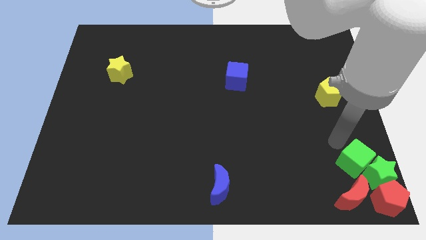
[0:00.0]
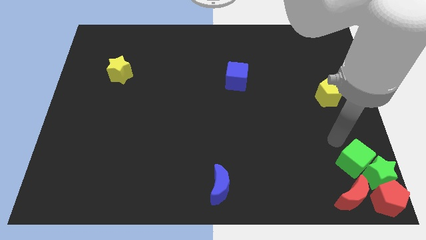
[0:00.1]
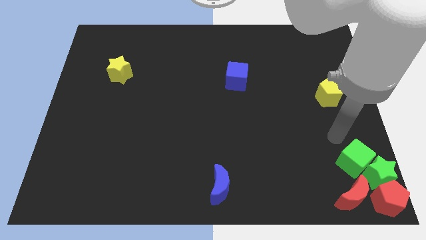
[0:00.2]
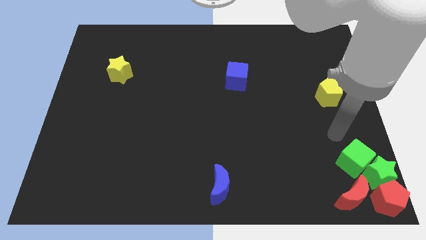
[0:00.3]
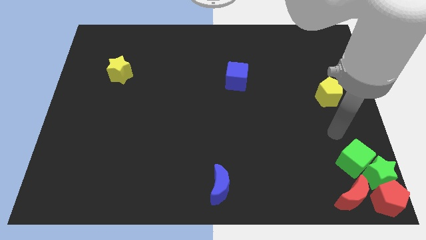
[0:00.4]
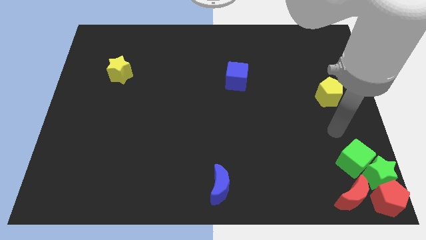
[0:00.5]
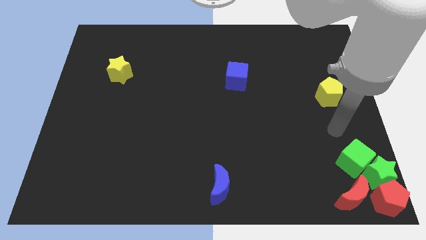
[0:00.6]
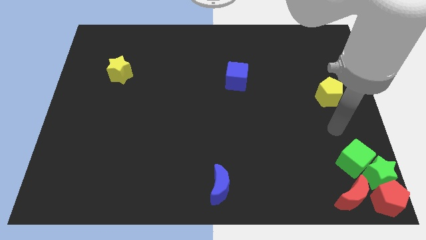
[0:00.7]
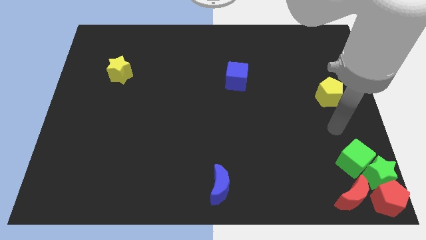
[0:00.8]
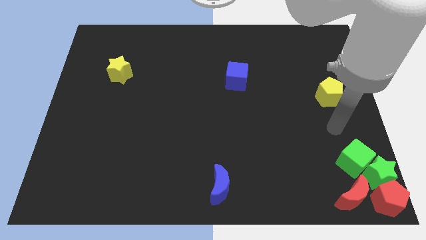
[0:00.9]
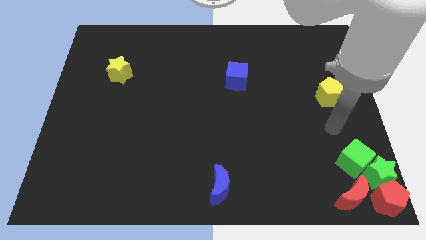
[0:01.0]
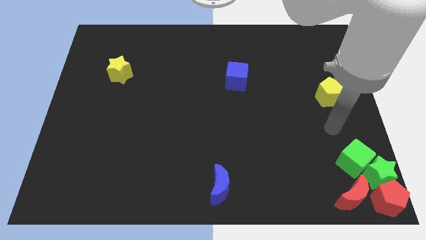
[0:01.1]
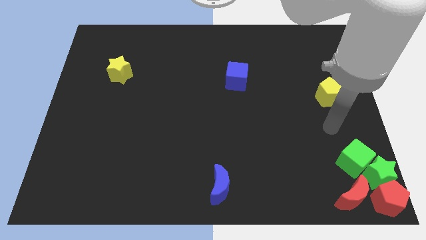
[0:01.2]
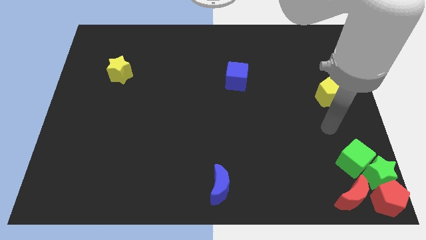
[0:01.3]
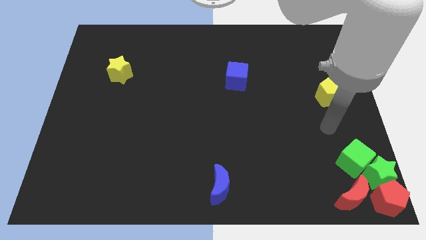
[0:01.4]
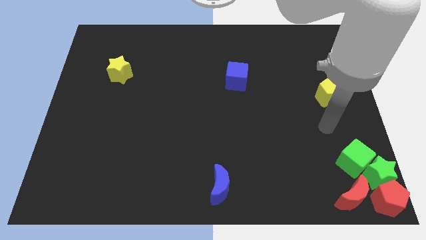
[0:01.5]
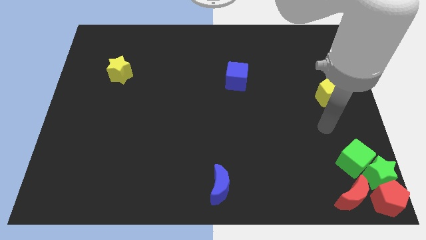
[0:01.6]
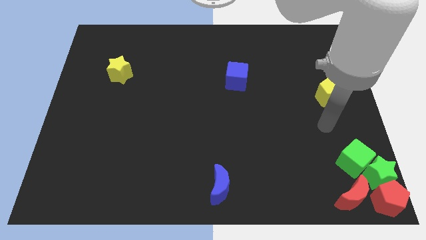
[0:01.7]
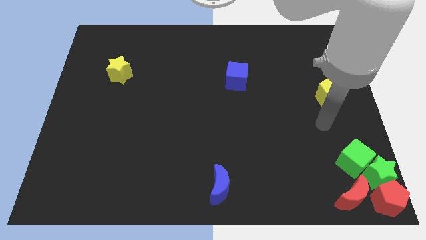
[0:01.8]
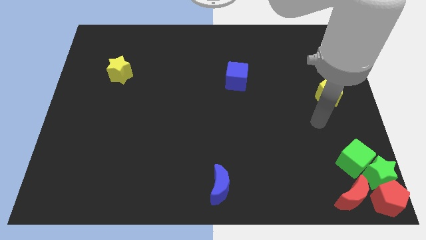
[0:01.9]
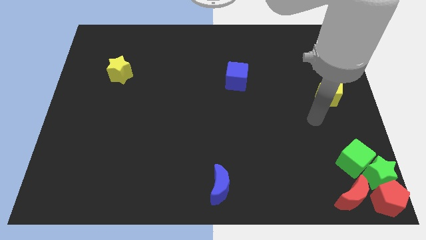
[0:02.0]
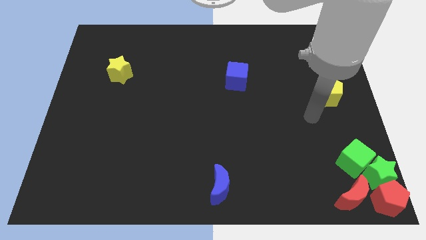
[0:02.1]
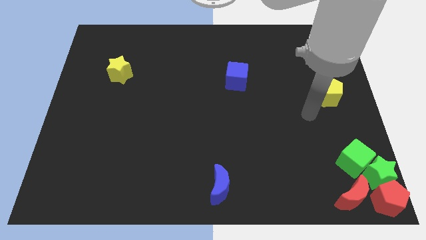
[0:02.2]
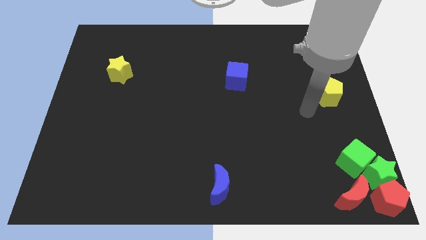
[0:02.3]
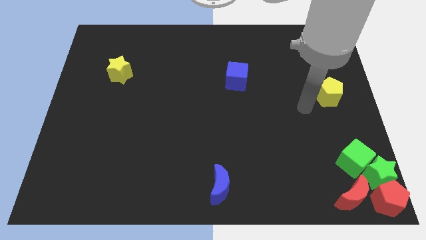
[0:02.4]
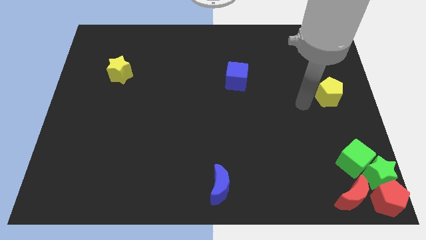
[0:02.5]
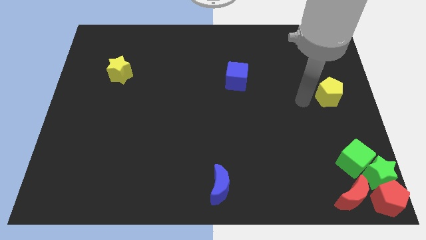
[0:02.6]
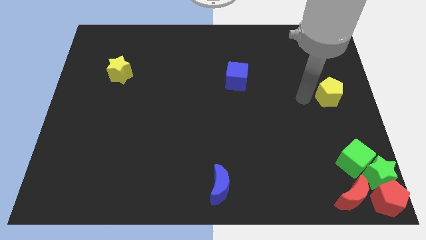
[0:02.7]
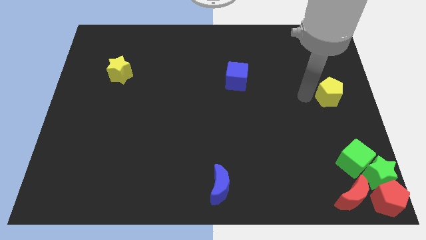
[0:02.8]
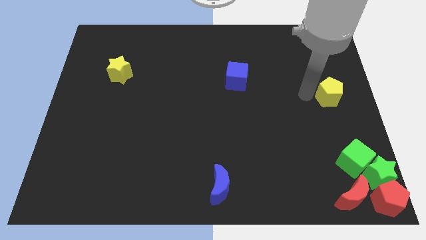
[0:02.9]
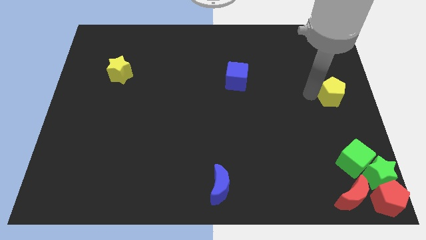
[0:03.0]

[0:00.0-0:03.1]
move your arm to the left of the yellow pentagon

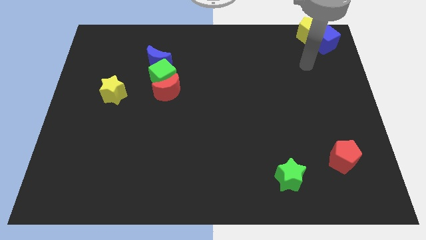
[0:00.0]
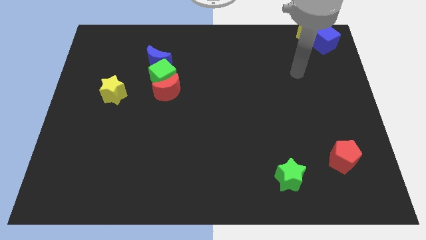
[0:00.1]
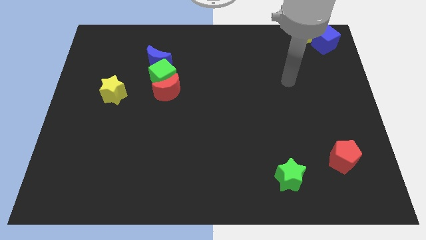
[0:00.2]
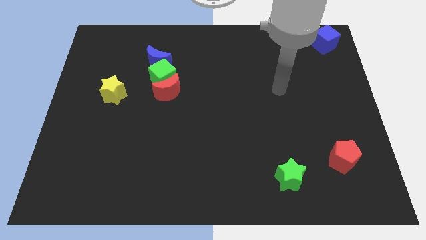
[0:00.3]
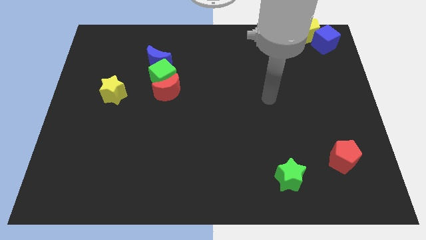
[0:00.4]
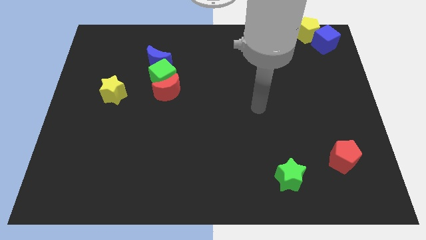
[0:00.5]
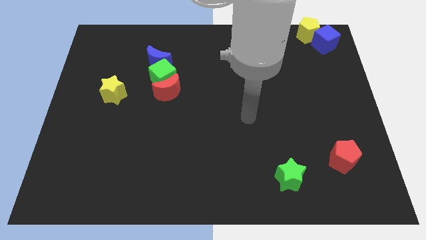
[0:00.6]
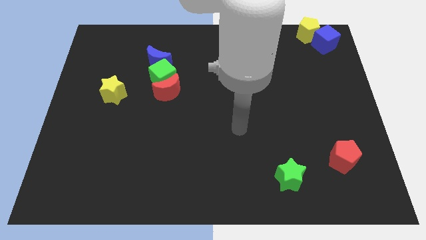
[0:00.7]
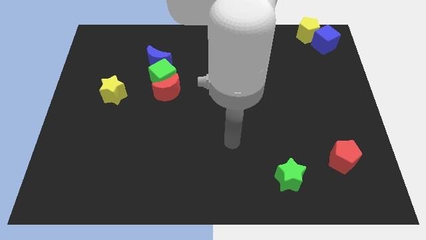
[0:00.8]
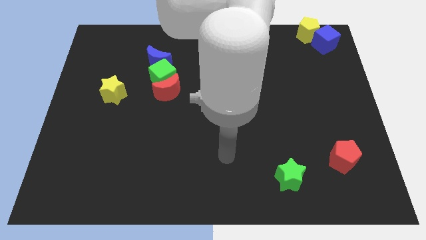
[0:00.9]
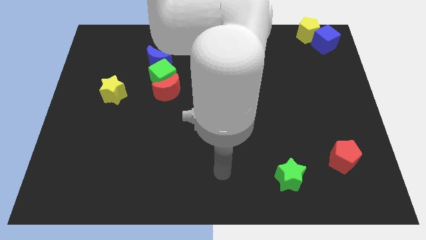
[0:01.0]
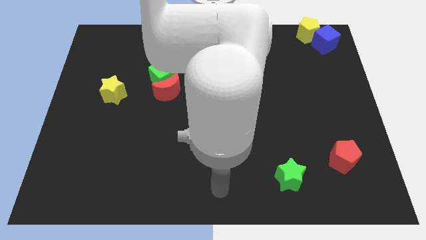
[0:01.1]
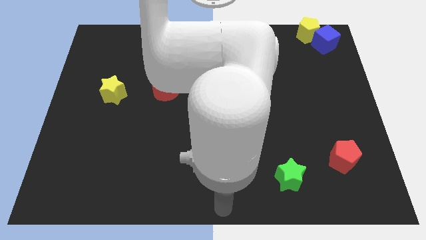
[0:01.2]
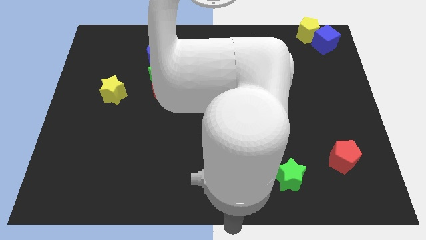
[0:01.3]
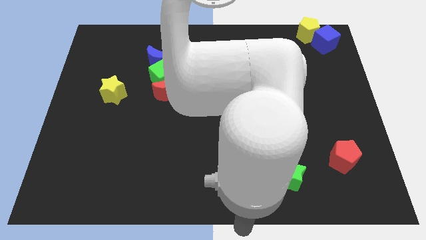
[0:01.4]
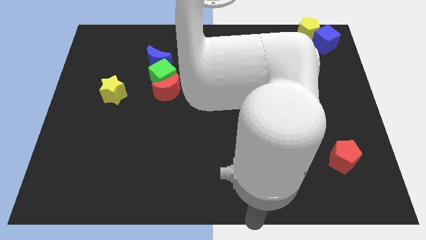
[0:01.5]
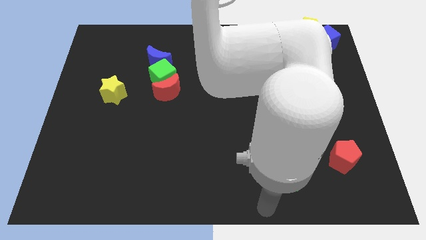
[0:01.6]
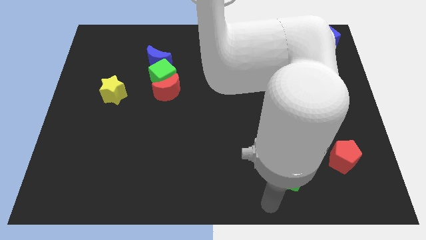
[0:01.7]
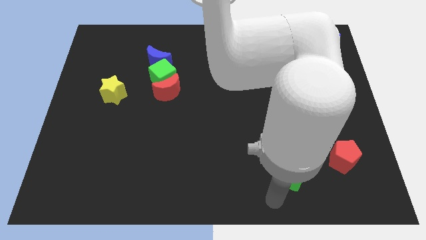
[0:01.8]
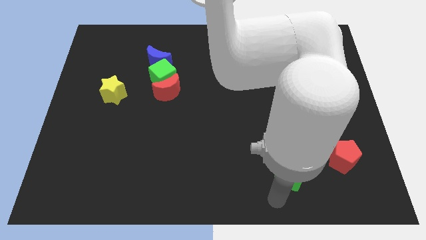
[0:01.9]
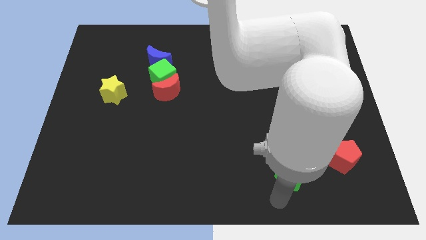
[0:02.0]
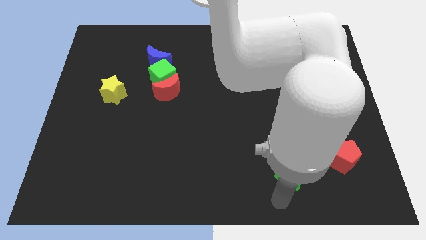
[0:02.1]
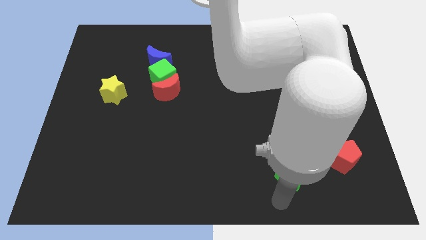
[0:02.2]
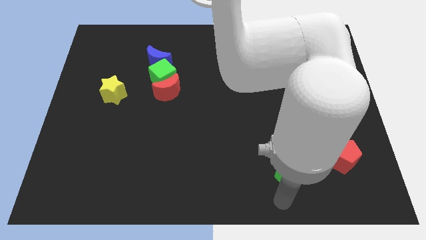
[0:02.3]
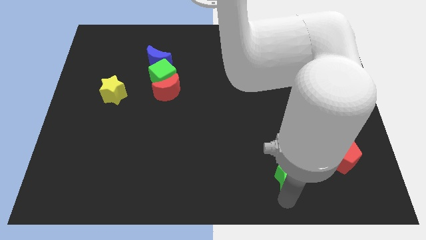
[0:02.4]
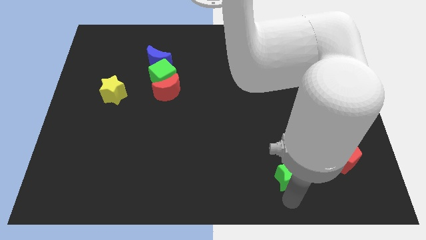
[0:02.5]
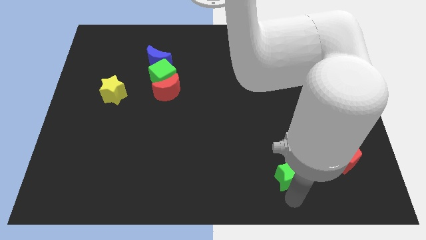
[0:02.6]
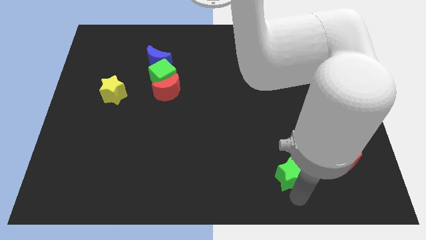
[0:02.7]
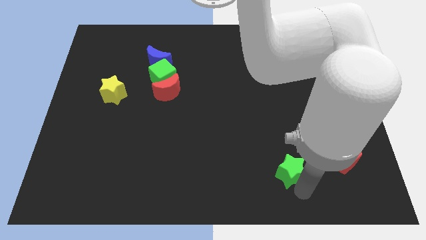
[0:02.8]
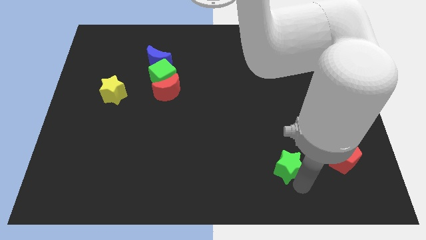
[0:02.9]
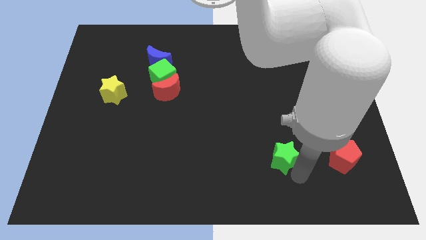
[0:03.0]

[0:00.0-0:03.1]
touch the bottom of green star

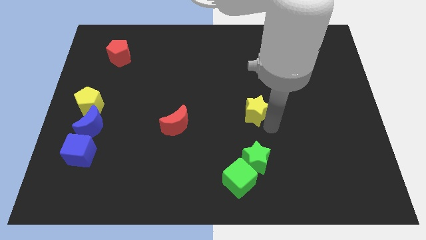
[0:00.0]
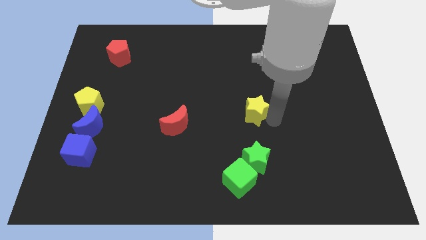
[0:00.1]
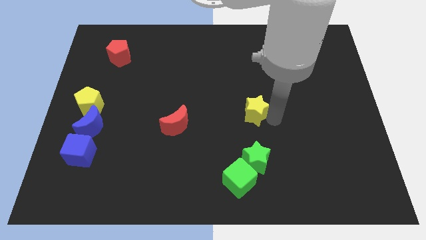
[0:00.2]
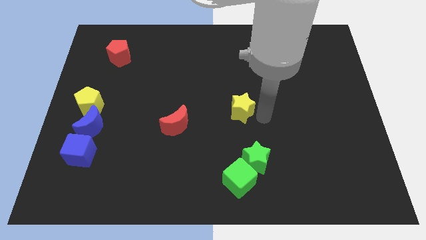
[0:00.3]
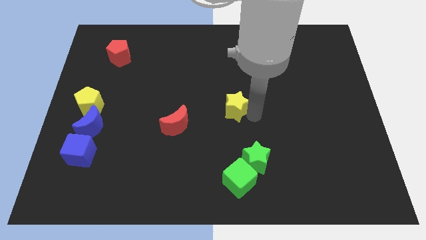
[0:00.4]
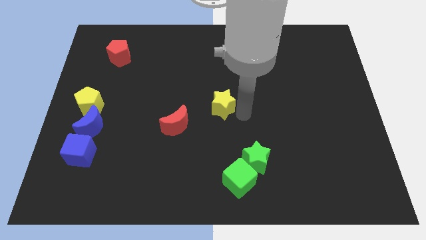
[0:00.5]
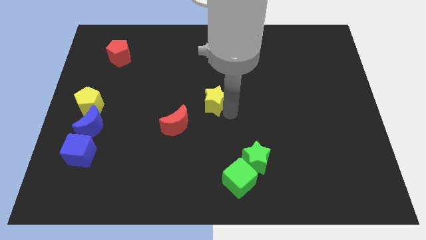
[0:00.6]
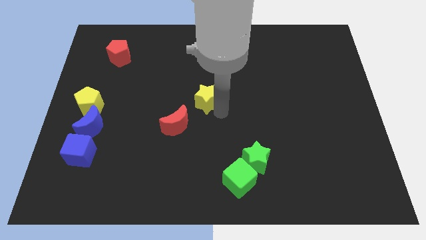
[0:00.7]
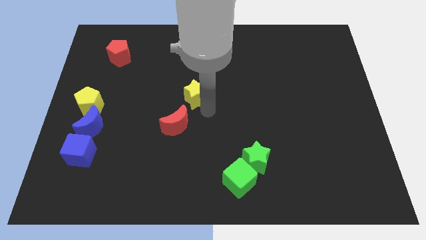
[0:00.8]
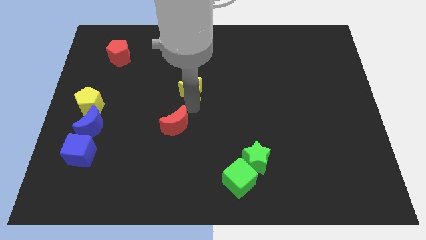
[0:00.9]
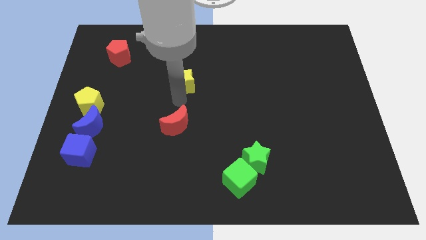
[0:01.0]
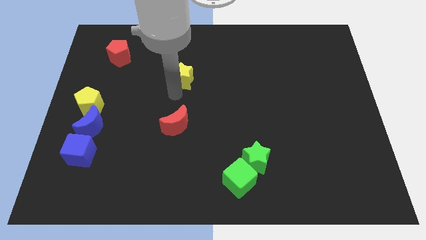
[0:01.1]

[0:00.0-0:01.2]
move yellow star vertically above the red moon

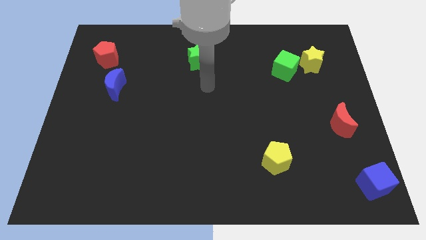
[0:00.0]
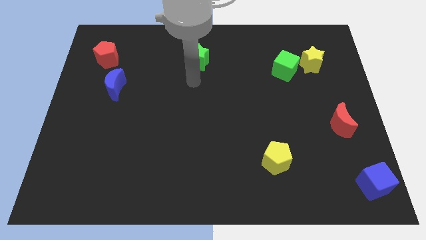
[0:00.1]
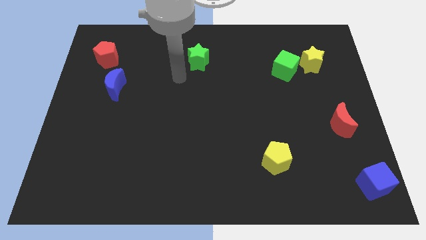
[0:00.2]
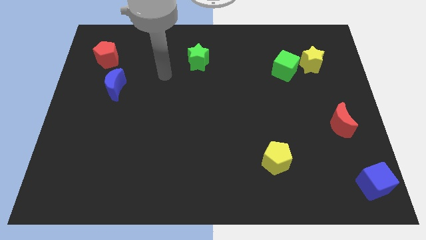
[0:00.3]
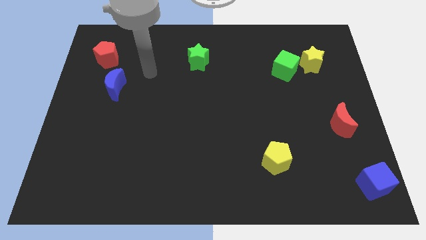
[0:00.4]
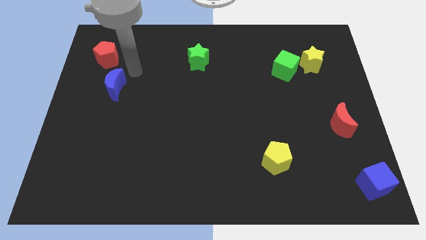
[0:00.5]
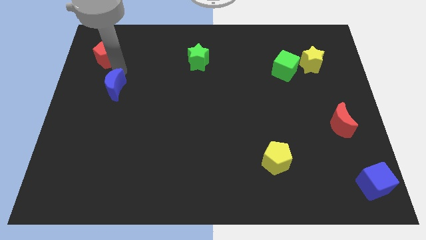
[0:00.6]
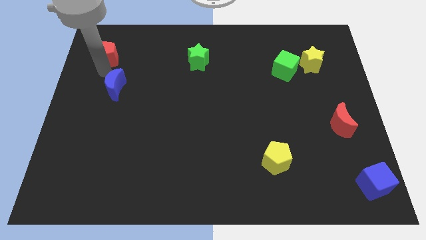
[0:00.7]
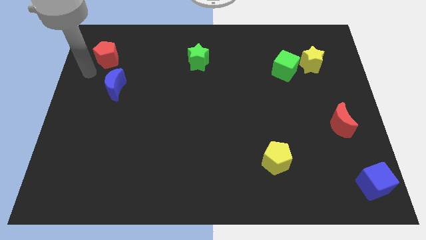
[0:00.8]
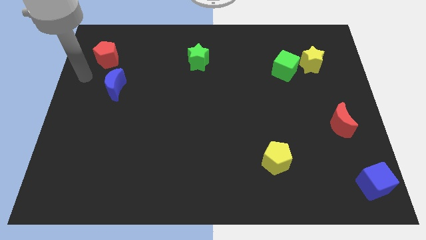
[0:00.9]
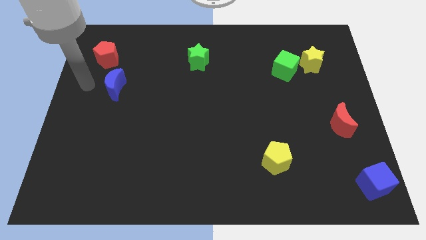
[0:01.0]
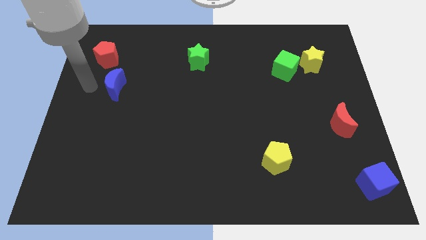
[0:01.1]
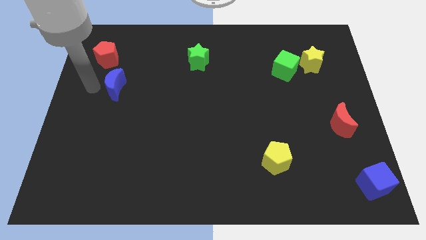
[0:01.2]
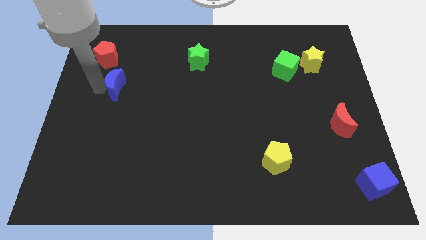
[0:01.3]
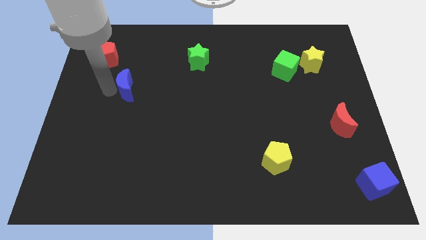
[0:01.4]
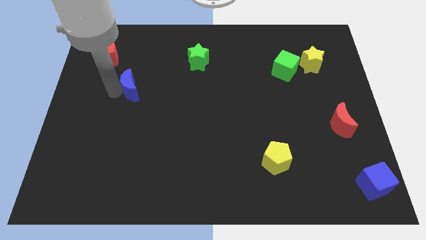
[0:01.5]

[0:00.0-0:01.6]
move the blue crescent to the bottom right of the red pentagon
